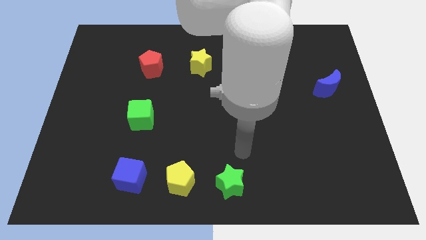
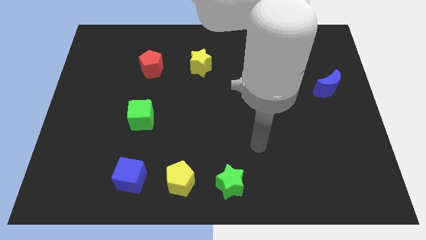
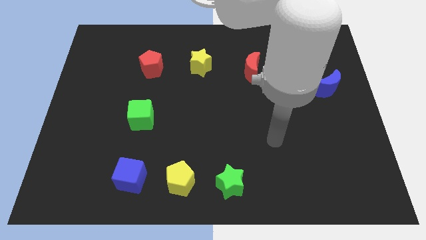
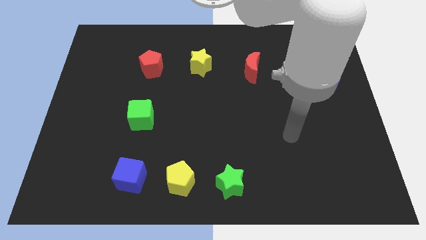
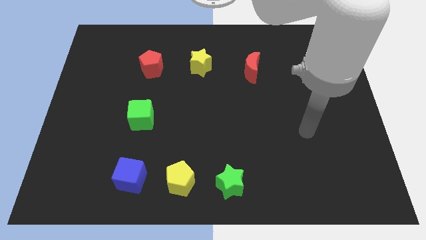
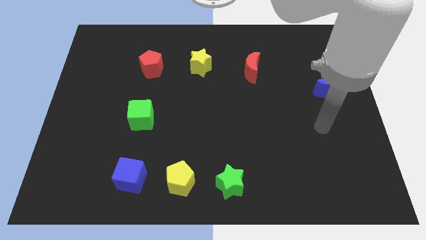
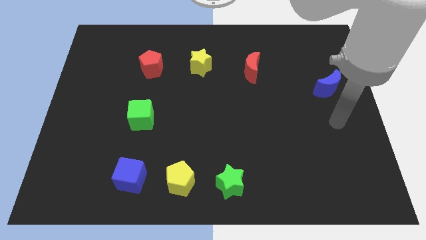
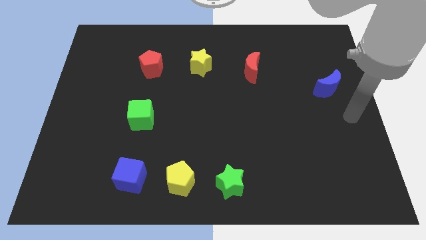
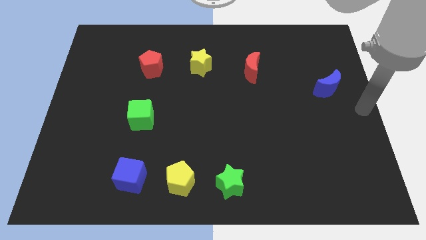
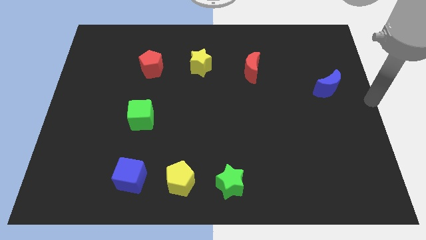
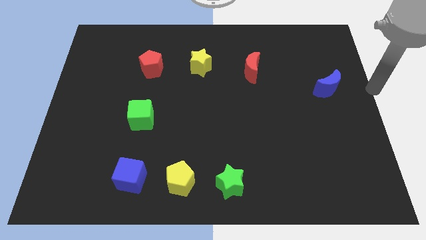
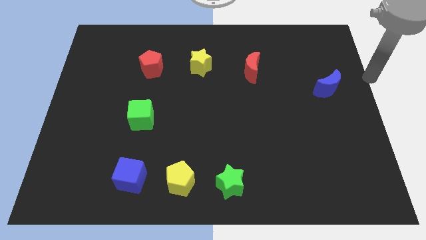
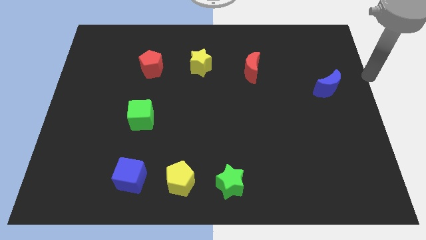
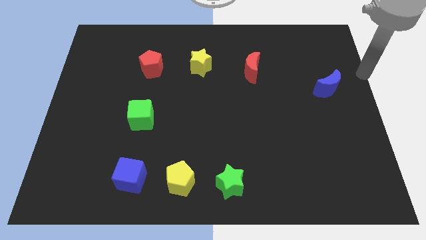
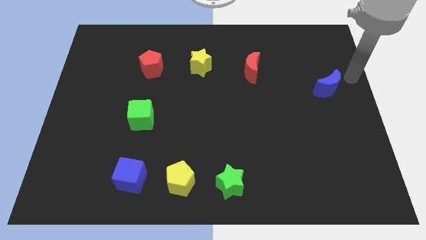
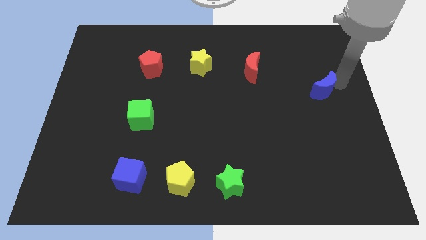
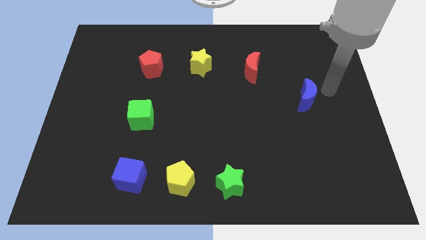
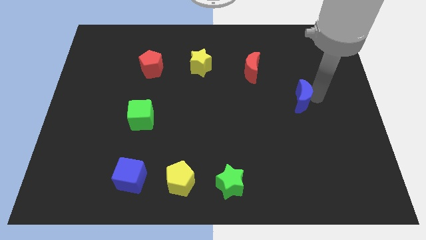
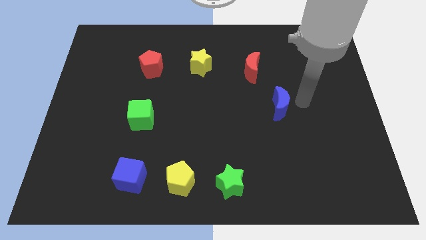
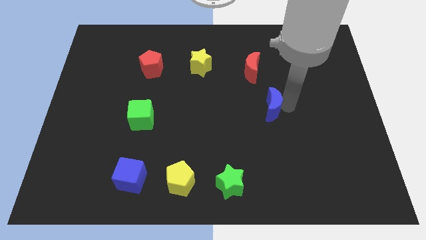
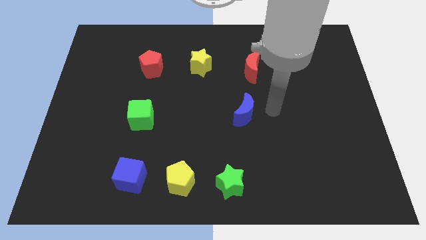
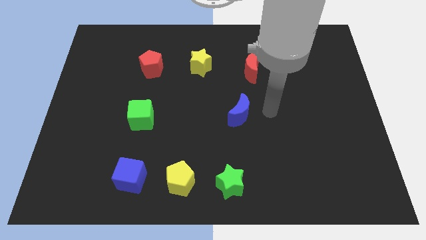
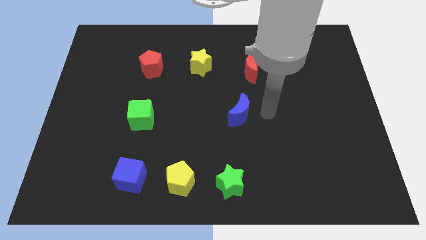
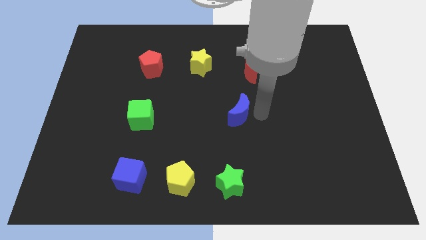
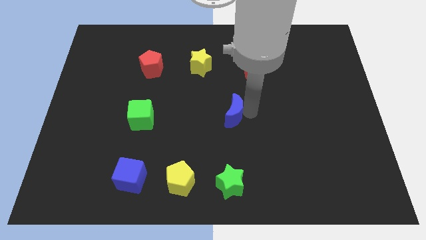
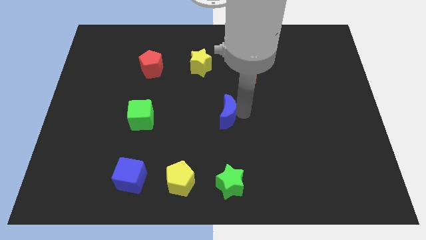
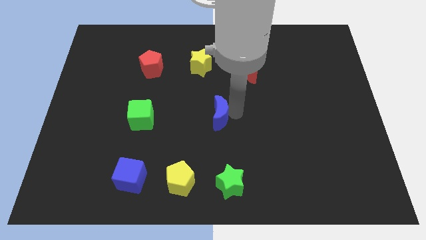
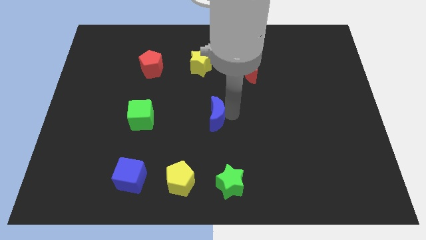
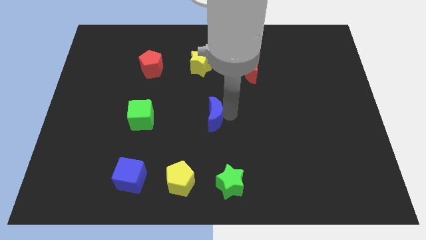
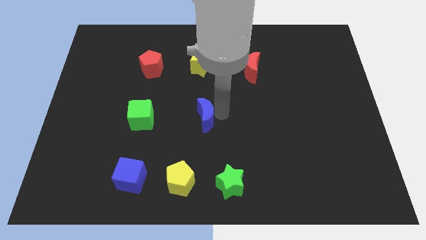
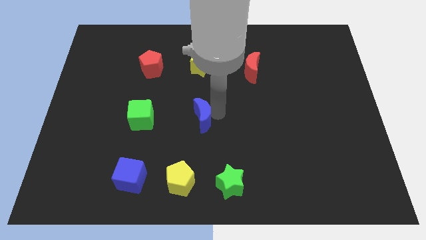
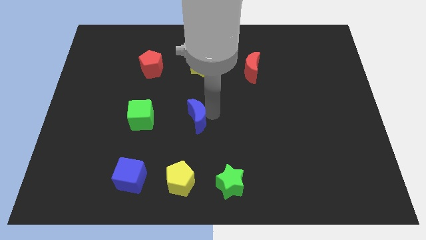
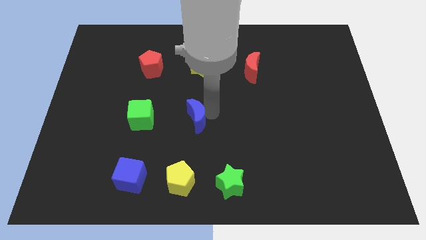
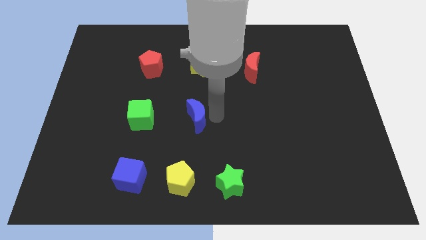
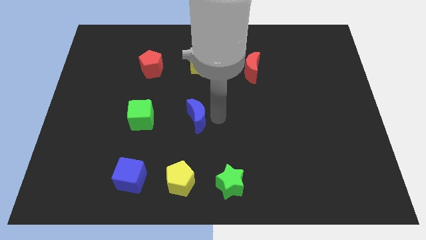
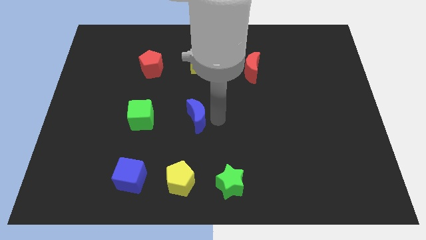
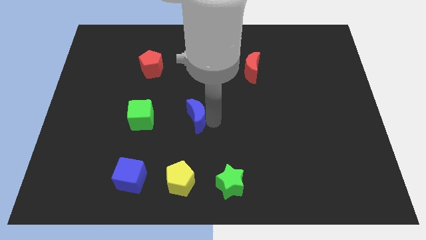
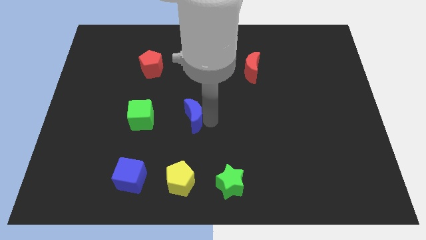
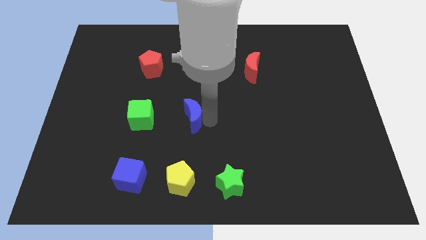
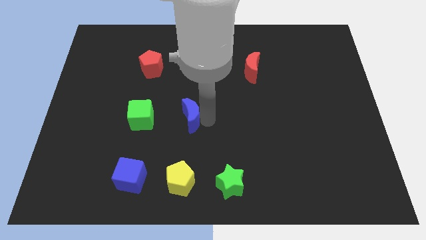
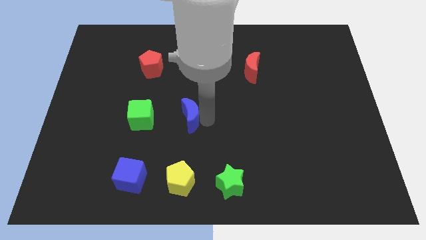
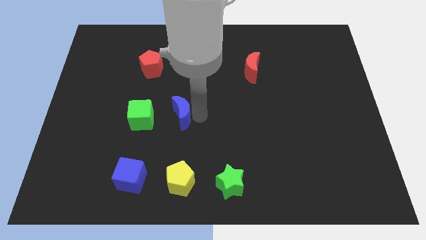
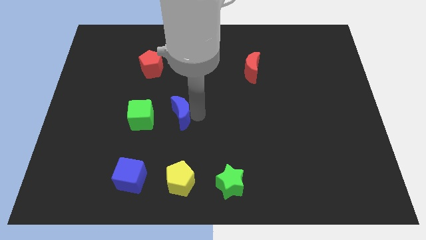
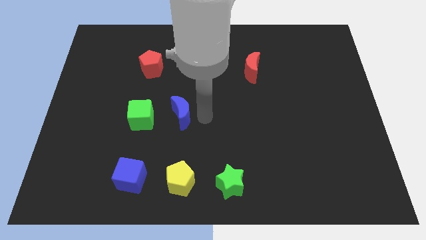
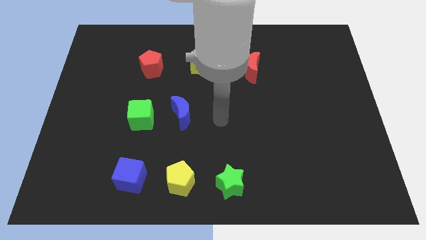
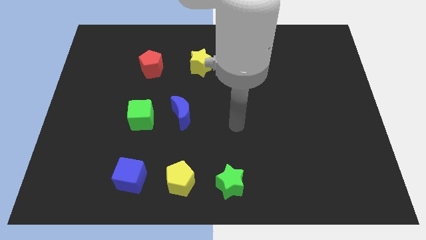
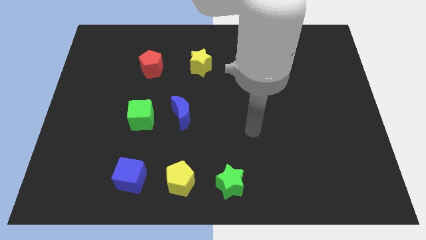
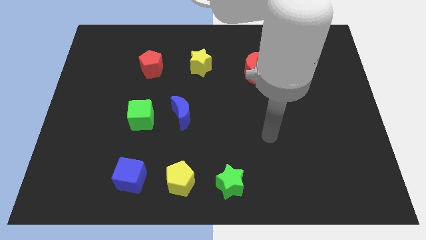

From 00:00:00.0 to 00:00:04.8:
place the blue moon to the right of the green cube

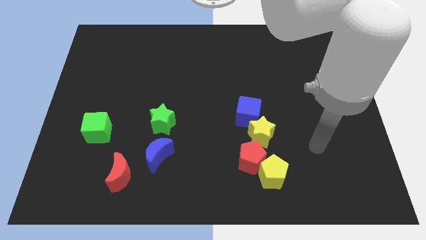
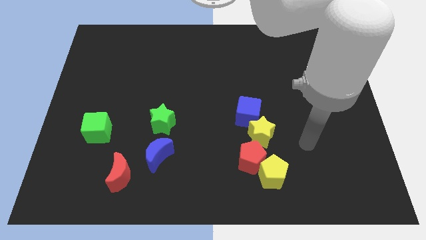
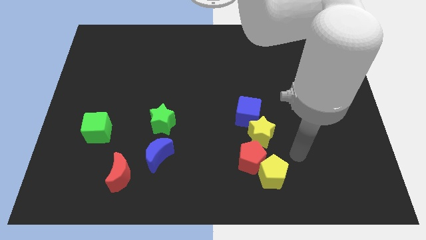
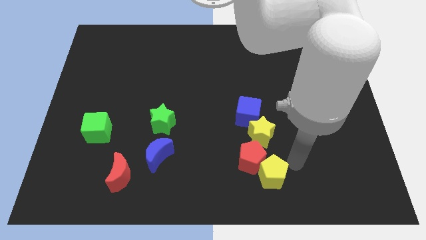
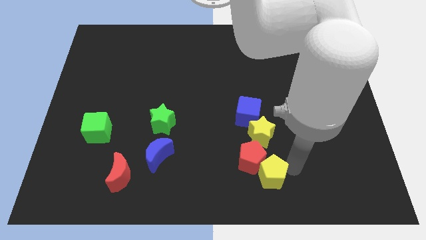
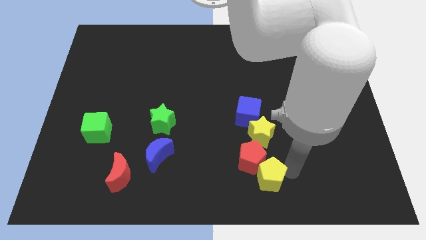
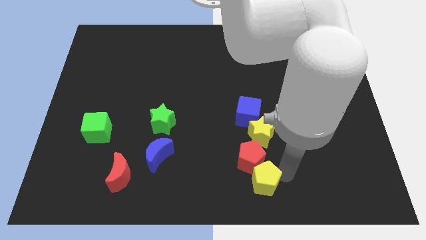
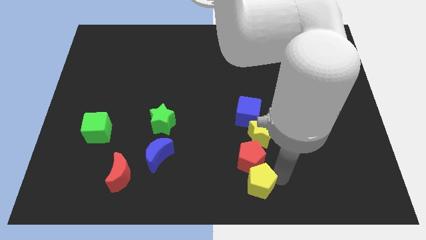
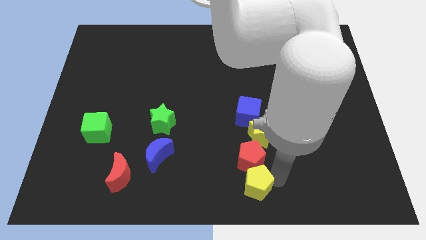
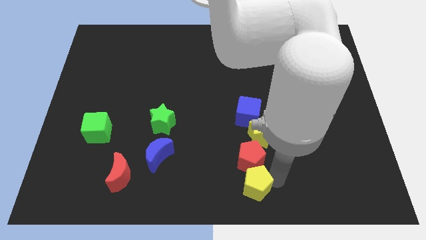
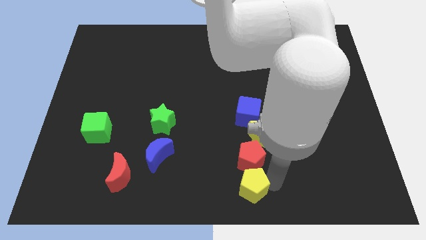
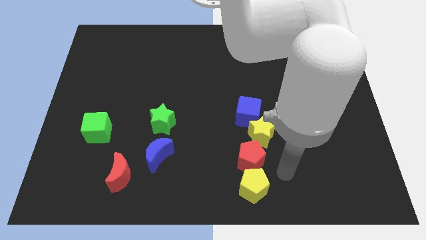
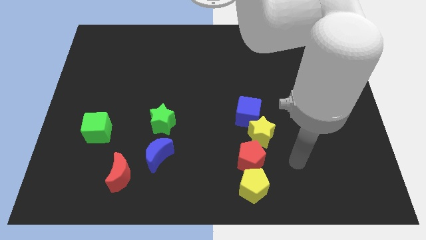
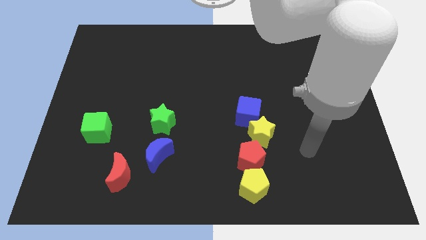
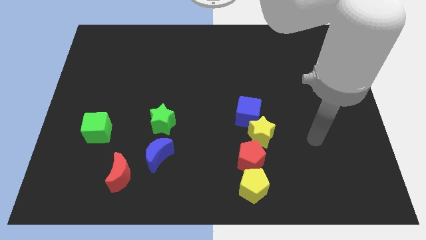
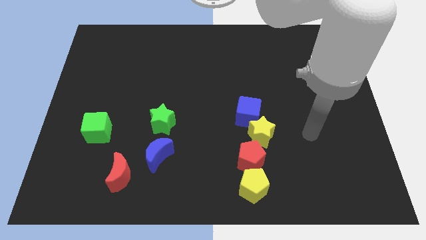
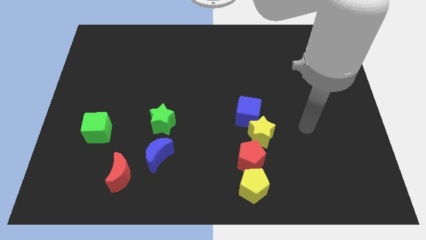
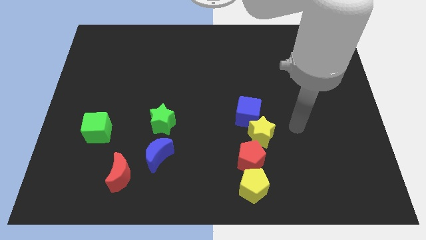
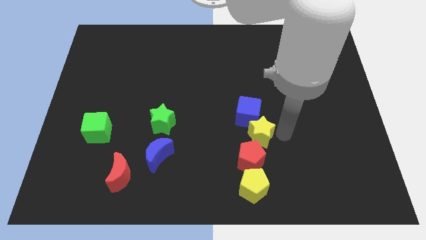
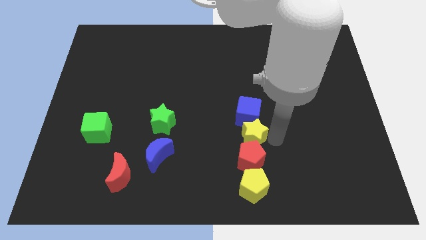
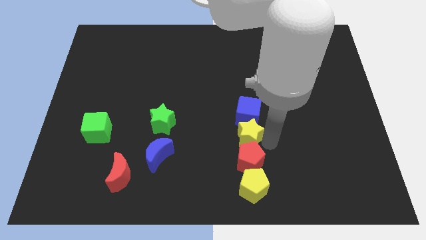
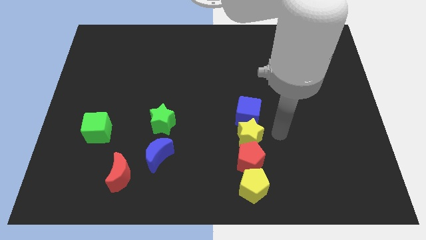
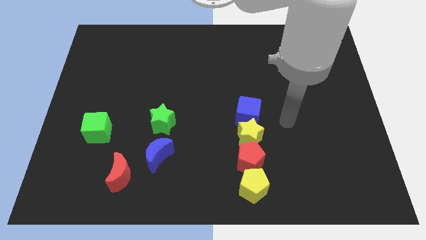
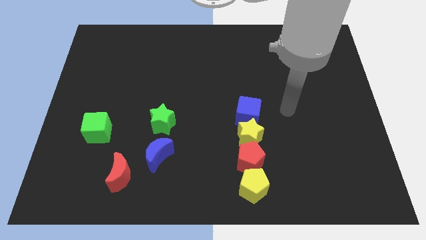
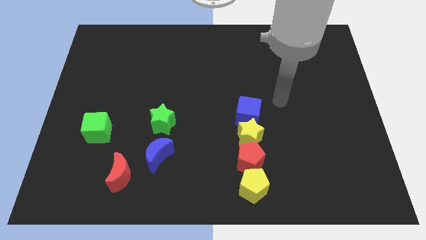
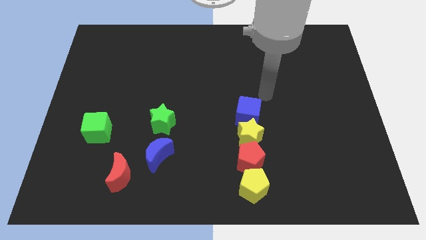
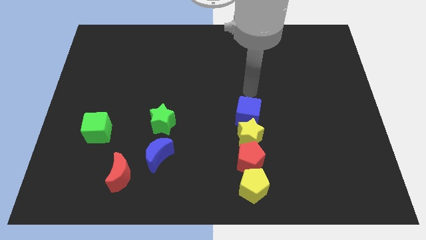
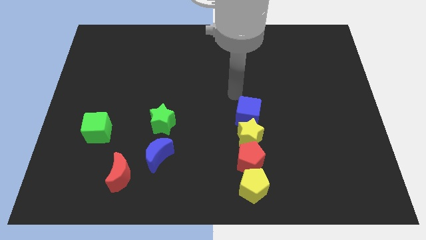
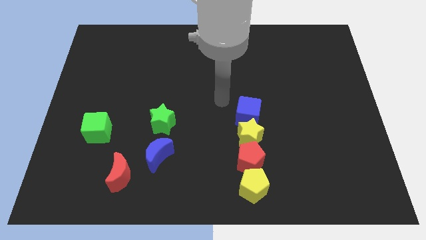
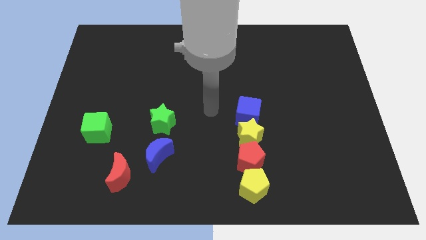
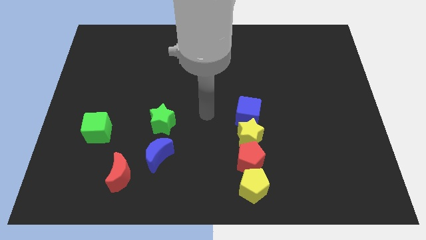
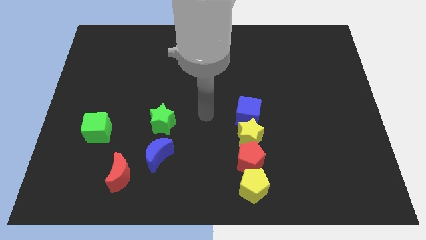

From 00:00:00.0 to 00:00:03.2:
adjust the yellow pentagon and yellow star into the vertical line

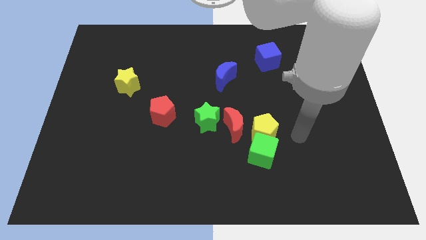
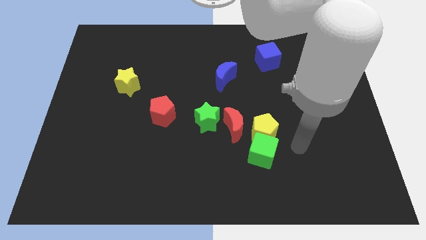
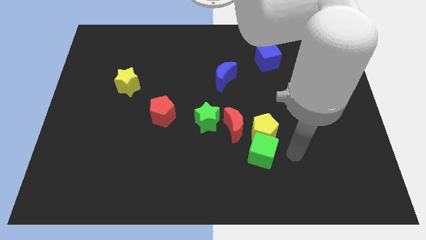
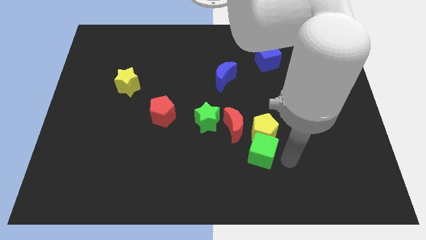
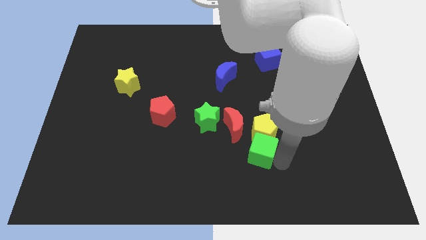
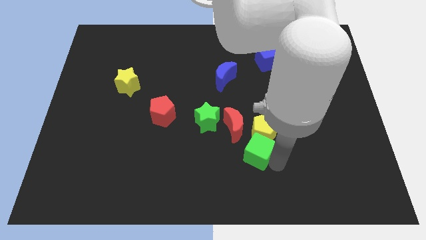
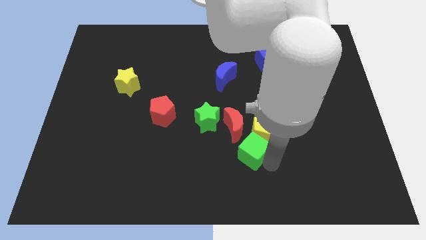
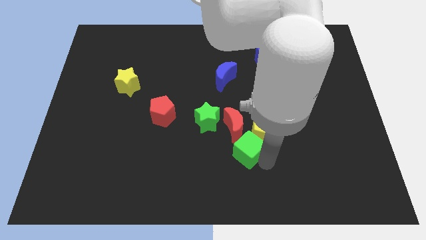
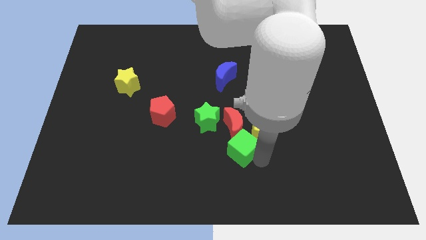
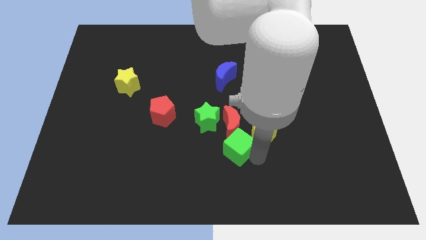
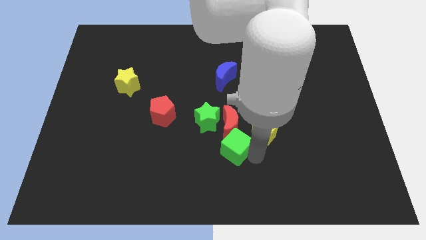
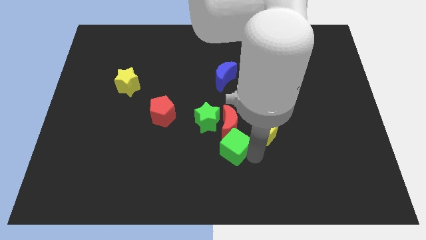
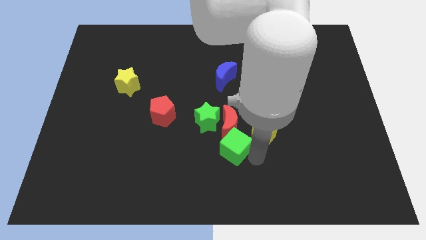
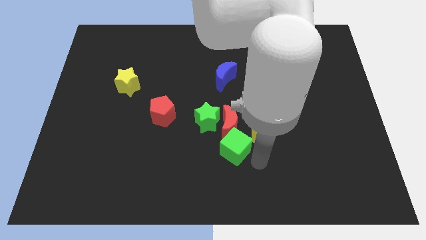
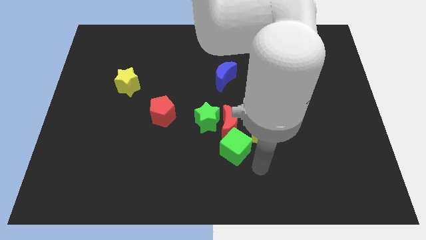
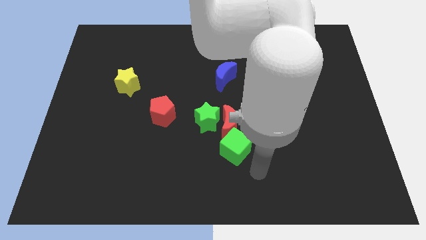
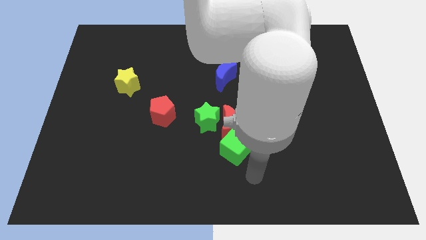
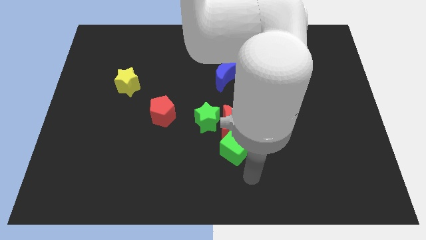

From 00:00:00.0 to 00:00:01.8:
slightly move the green cube to the left
